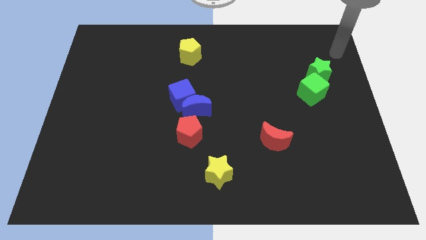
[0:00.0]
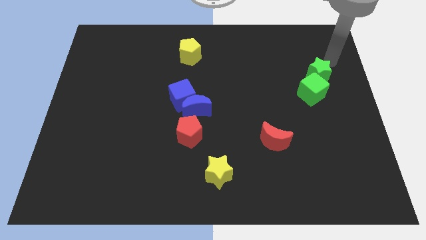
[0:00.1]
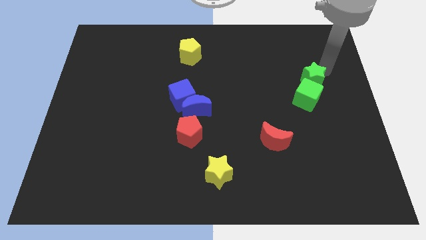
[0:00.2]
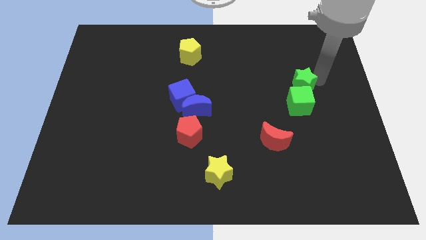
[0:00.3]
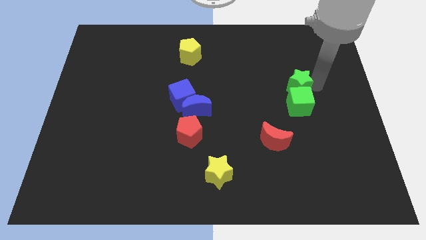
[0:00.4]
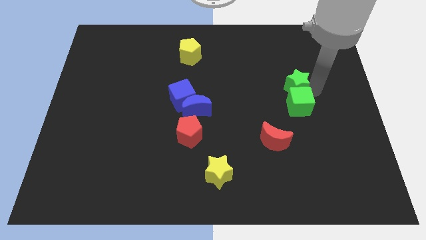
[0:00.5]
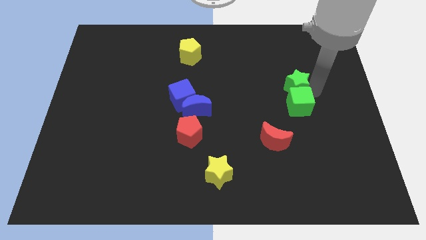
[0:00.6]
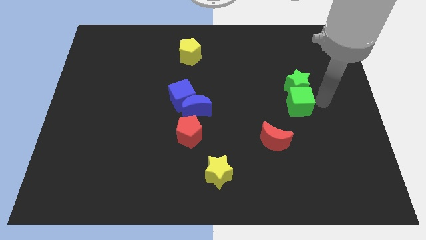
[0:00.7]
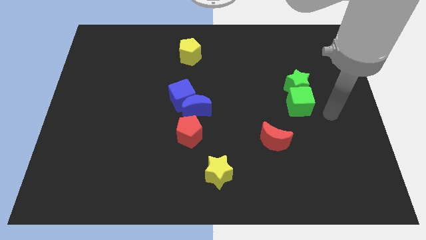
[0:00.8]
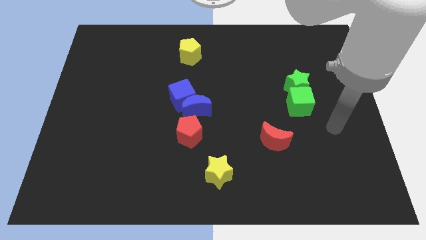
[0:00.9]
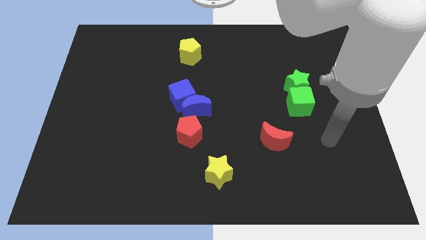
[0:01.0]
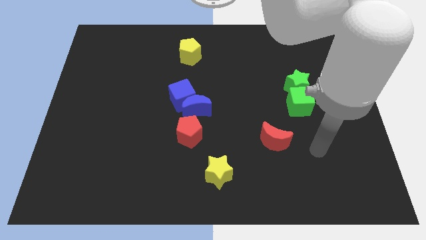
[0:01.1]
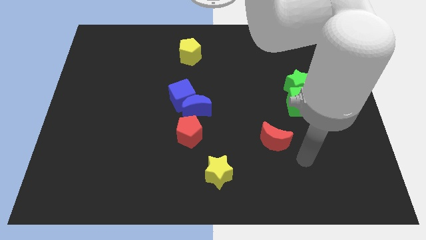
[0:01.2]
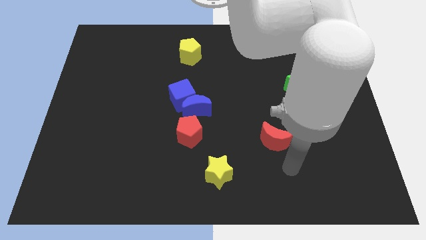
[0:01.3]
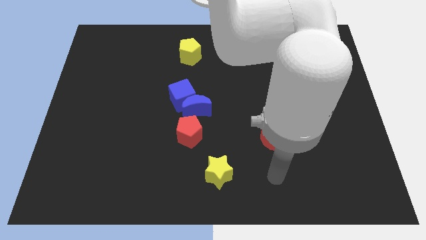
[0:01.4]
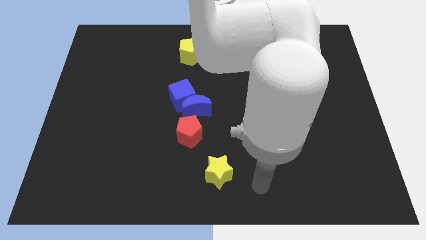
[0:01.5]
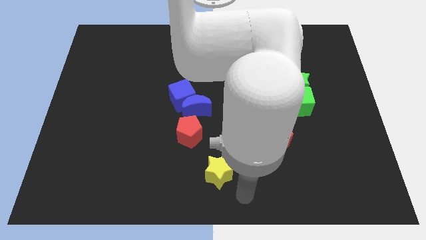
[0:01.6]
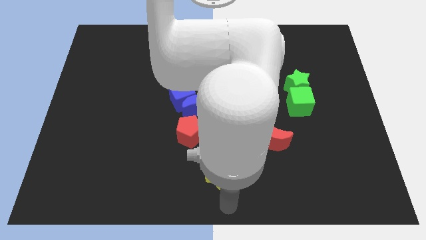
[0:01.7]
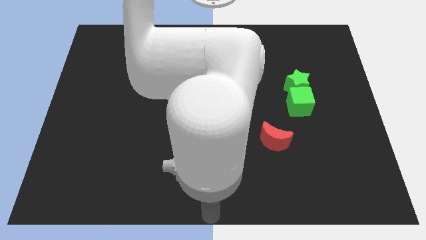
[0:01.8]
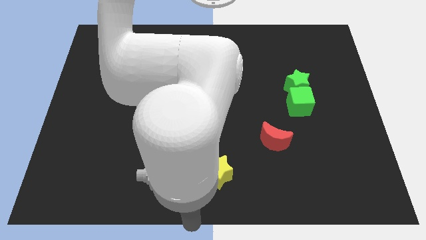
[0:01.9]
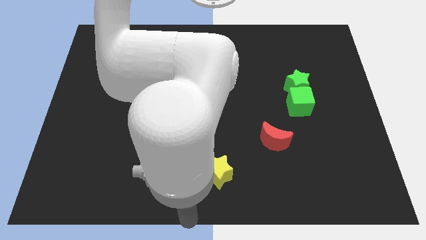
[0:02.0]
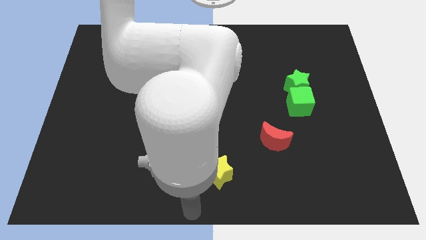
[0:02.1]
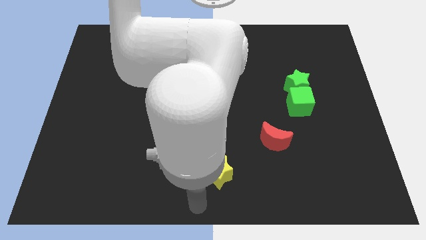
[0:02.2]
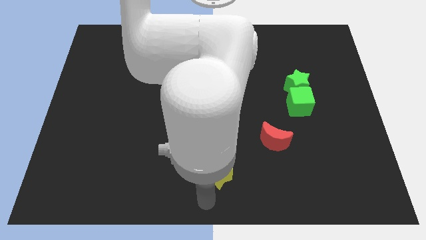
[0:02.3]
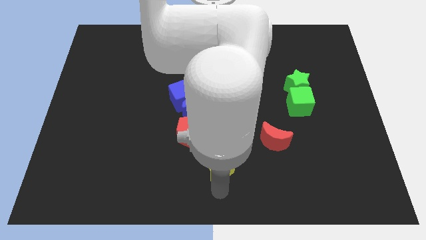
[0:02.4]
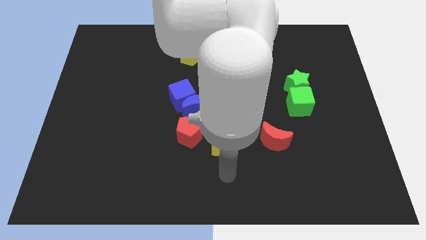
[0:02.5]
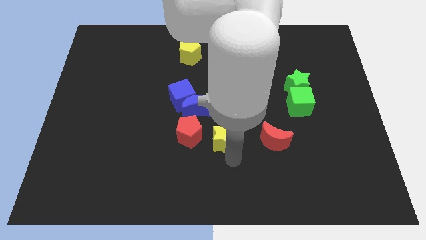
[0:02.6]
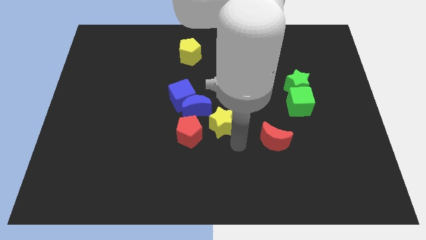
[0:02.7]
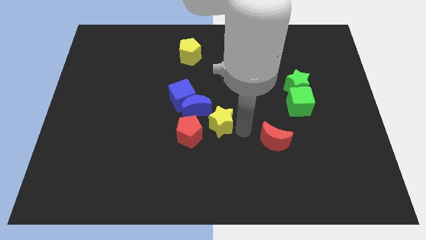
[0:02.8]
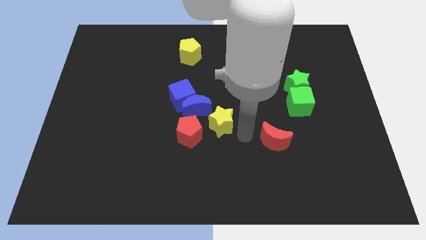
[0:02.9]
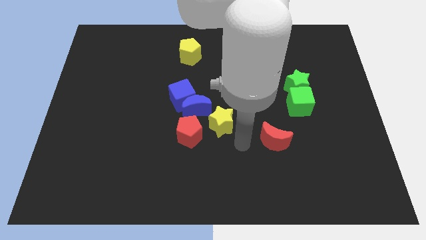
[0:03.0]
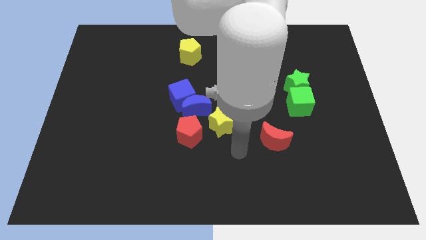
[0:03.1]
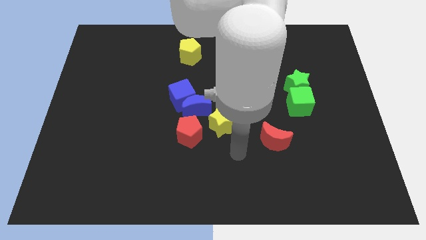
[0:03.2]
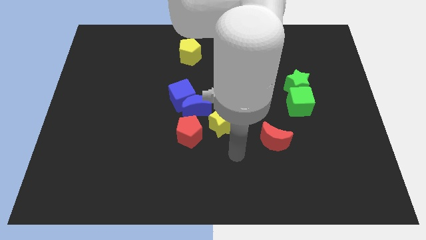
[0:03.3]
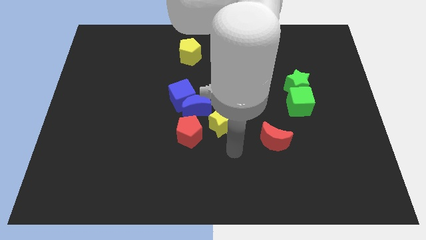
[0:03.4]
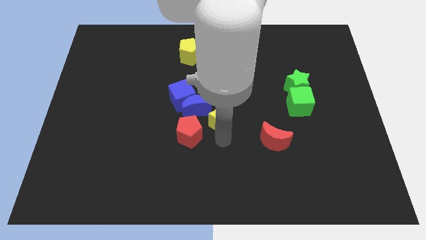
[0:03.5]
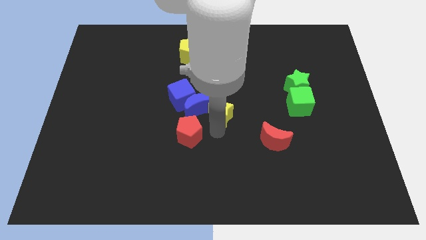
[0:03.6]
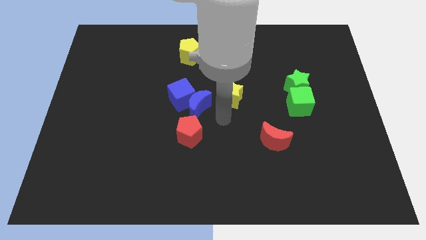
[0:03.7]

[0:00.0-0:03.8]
push the green star and move yellow star towards center

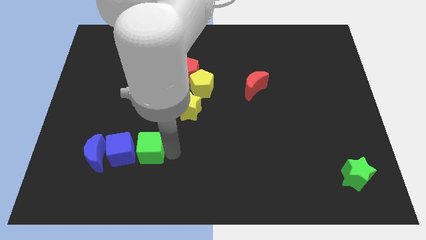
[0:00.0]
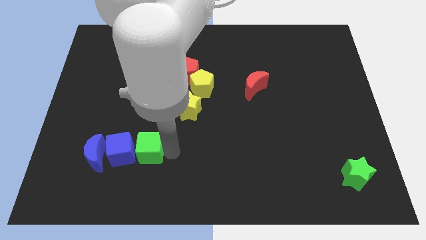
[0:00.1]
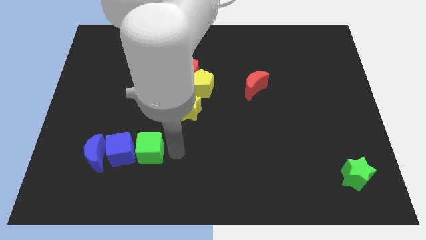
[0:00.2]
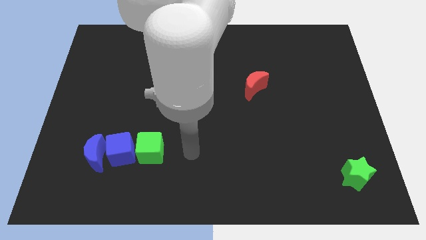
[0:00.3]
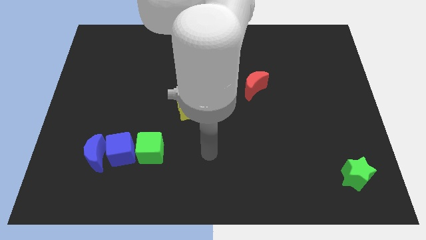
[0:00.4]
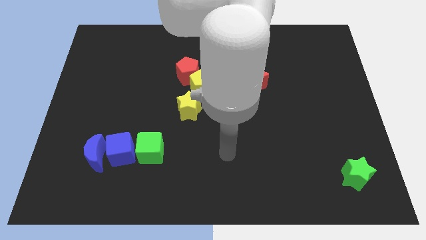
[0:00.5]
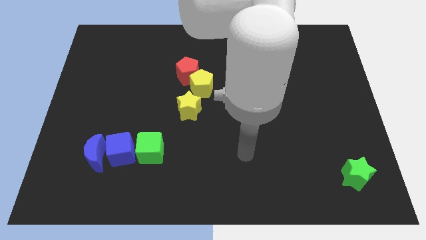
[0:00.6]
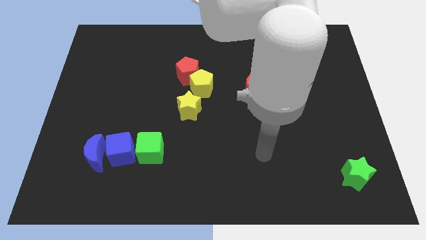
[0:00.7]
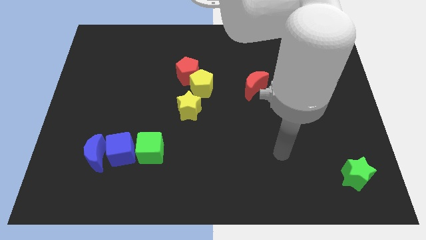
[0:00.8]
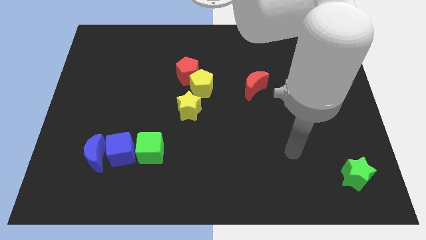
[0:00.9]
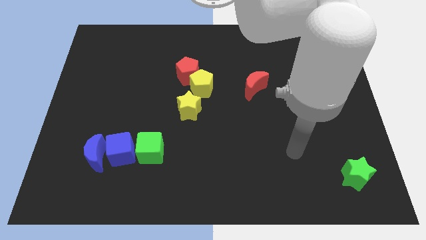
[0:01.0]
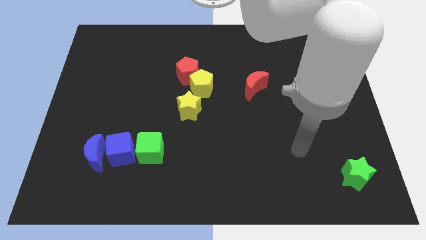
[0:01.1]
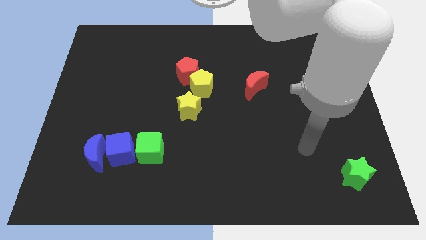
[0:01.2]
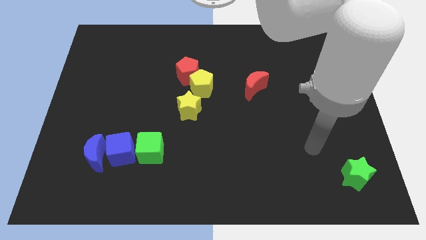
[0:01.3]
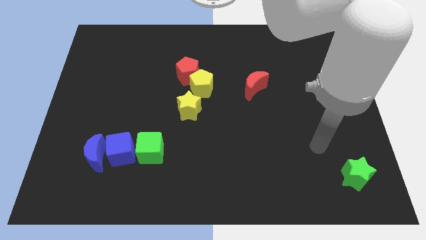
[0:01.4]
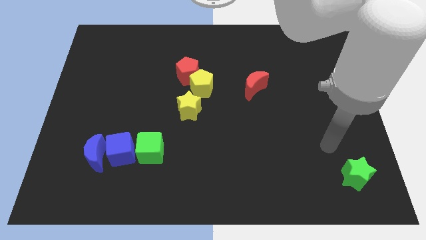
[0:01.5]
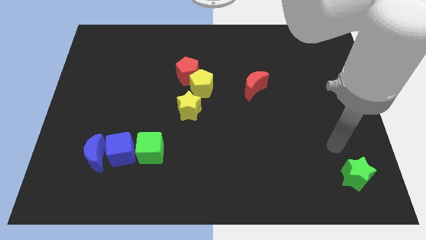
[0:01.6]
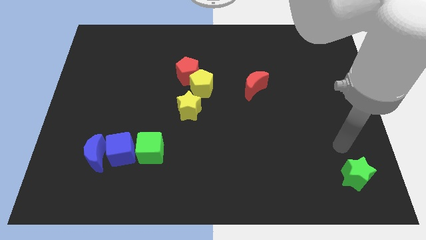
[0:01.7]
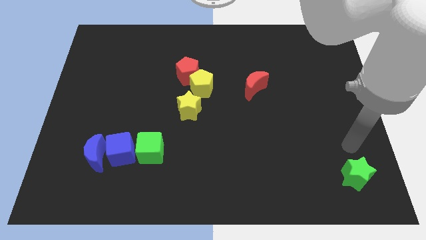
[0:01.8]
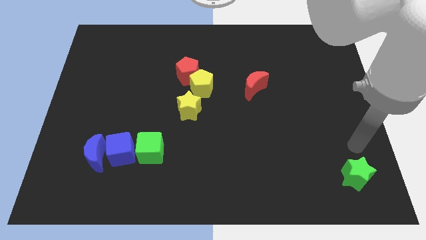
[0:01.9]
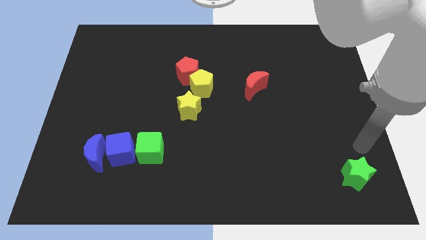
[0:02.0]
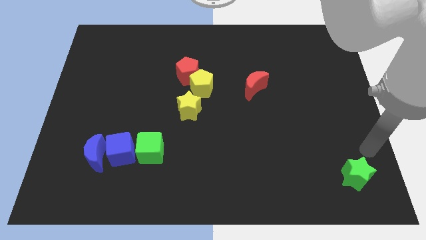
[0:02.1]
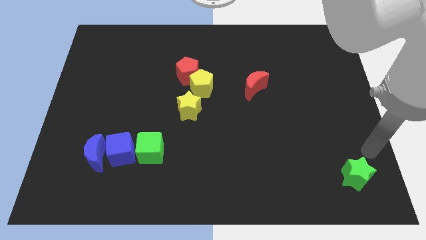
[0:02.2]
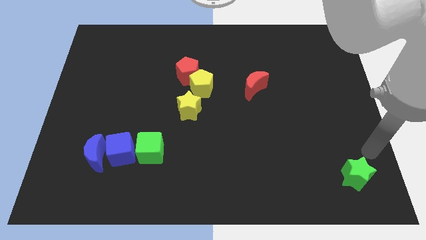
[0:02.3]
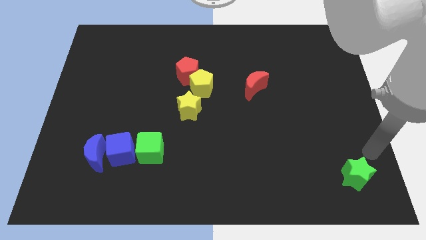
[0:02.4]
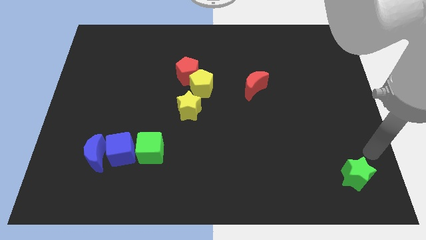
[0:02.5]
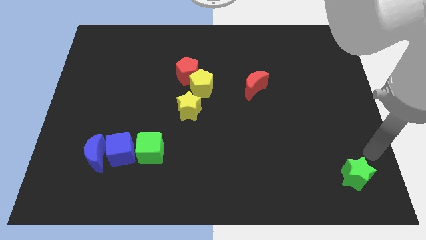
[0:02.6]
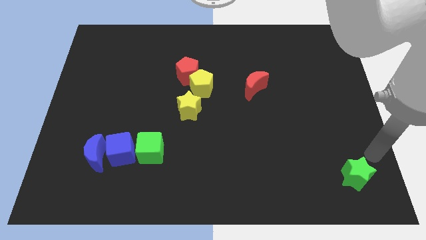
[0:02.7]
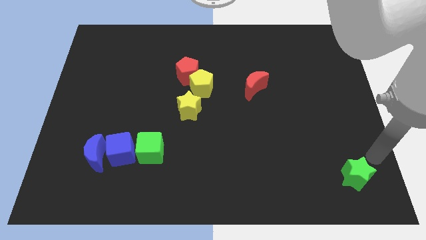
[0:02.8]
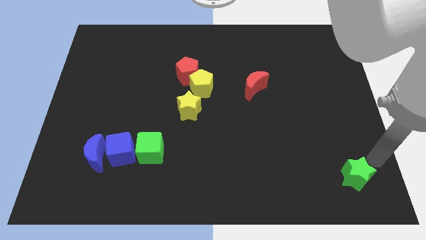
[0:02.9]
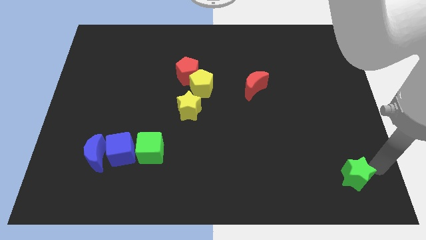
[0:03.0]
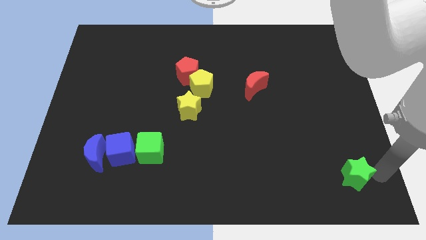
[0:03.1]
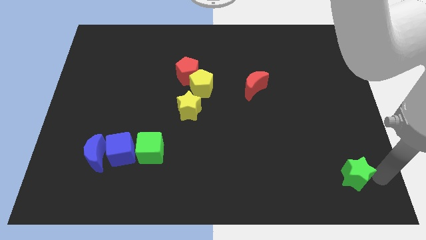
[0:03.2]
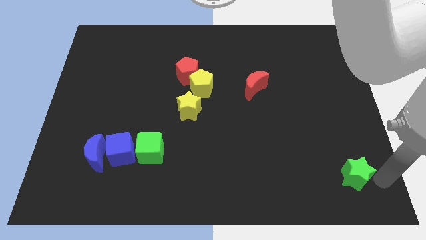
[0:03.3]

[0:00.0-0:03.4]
move the arm right to the green star

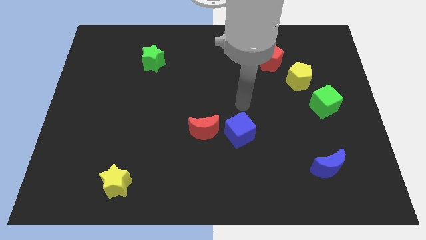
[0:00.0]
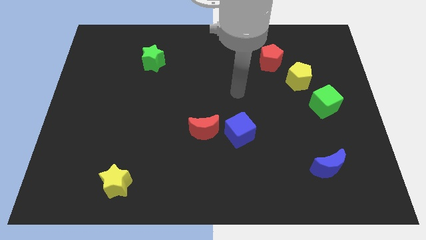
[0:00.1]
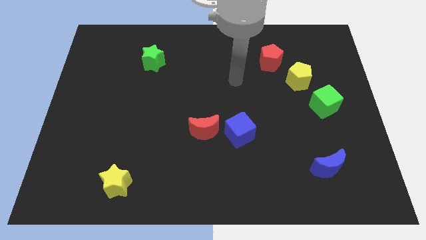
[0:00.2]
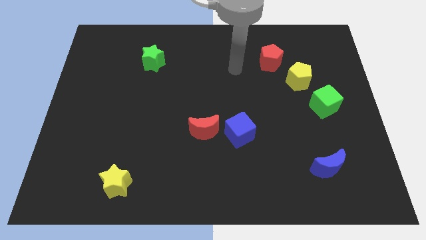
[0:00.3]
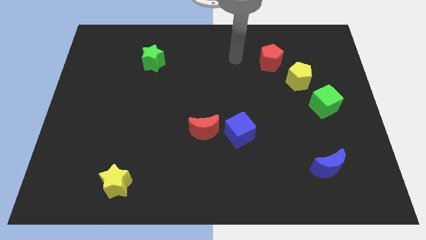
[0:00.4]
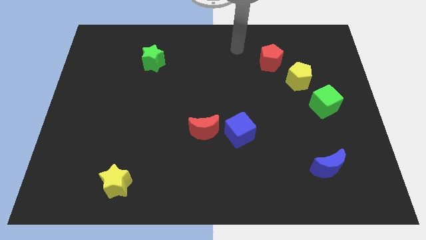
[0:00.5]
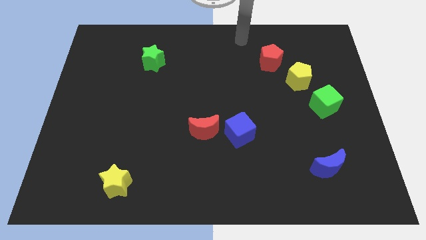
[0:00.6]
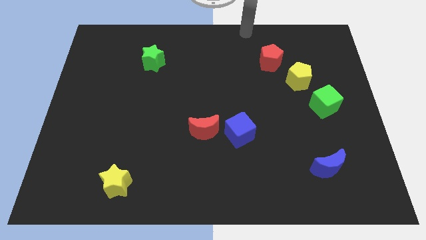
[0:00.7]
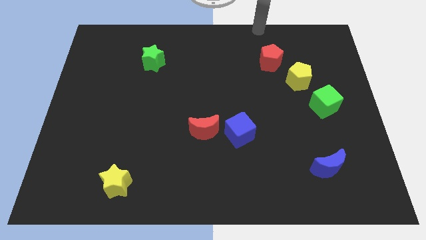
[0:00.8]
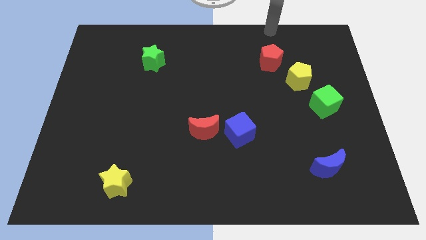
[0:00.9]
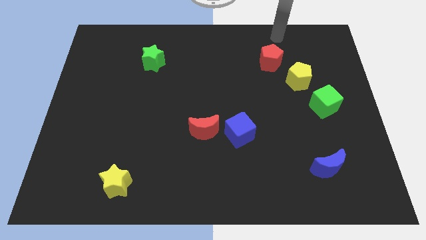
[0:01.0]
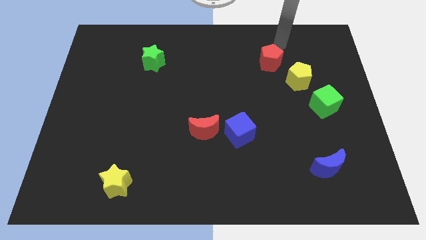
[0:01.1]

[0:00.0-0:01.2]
move the arm away from the blue cube

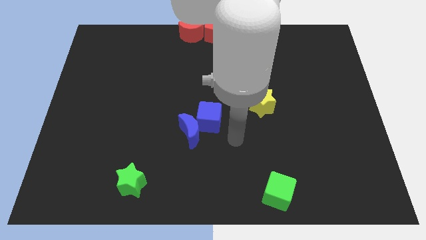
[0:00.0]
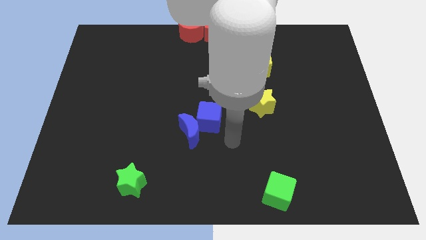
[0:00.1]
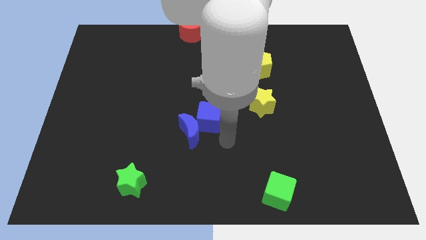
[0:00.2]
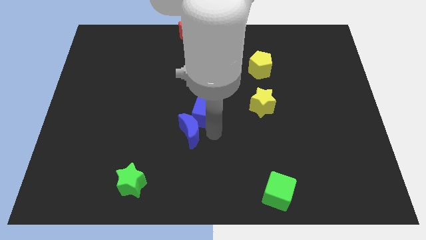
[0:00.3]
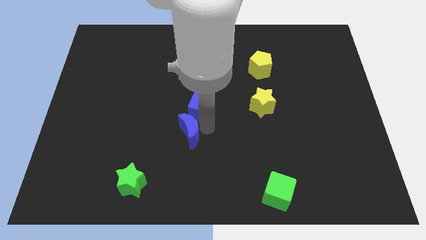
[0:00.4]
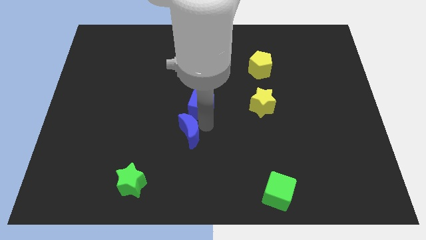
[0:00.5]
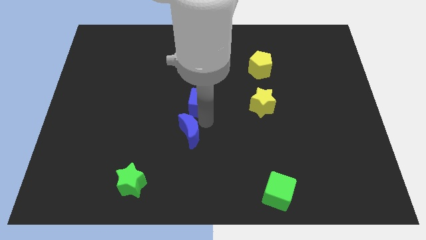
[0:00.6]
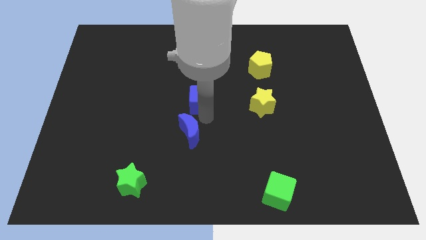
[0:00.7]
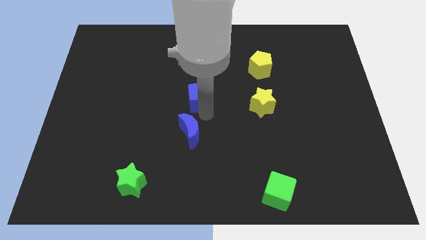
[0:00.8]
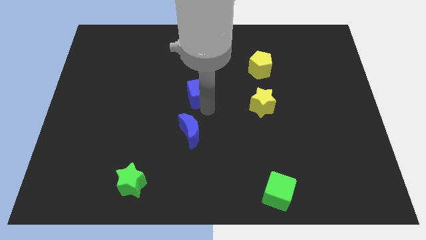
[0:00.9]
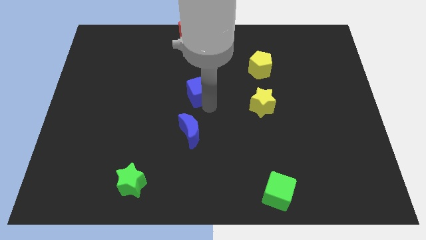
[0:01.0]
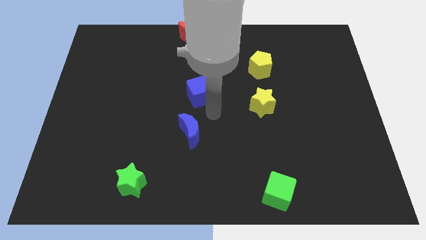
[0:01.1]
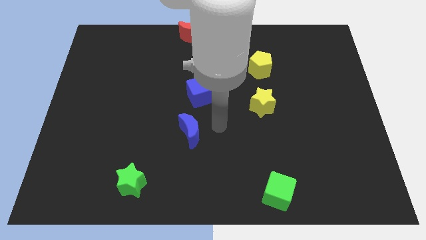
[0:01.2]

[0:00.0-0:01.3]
move the blue cube to the center of the board
